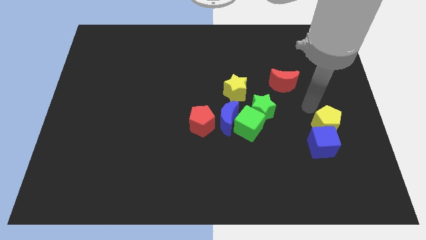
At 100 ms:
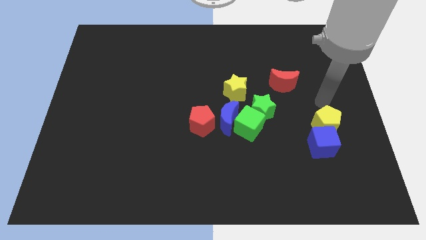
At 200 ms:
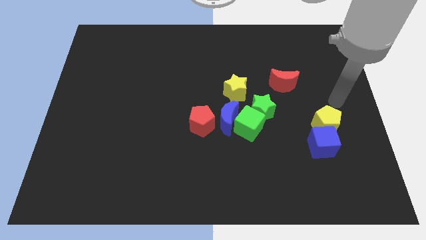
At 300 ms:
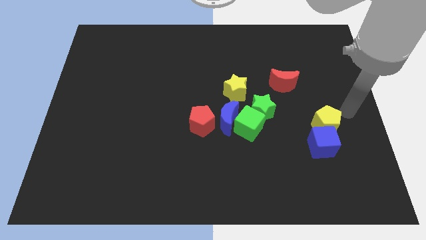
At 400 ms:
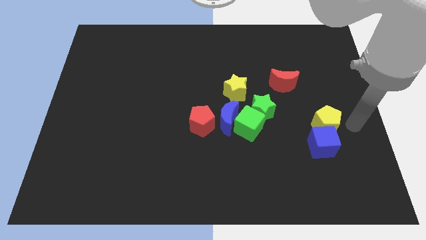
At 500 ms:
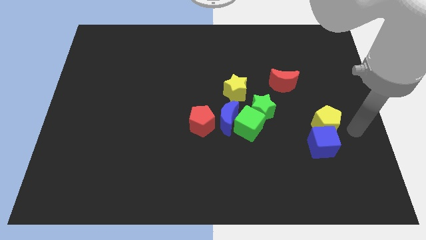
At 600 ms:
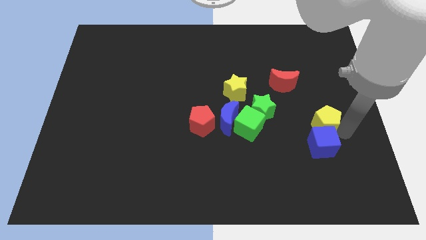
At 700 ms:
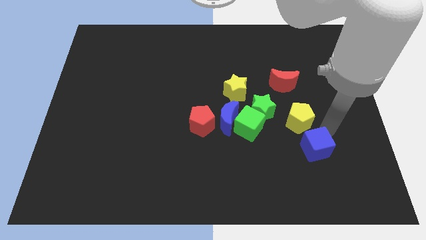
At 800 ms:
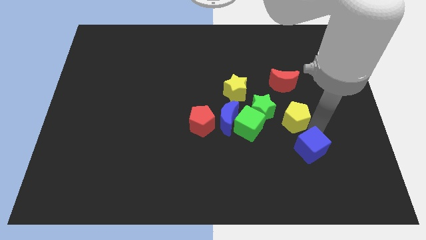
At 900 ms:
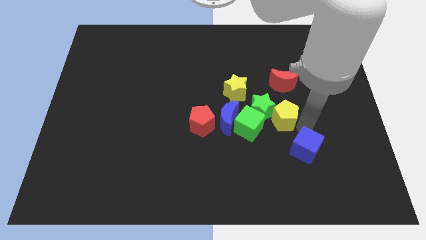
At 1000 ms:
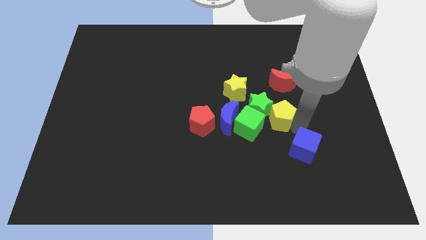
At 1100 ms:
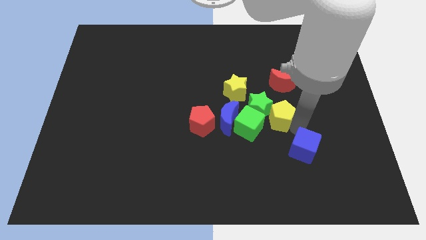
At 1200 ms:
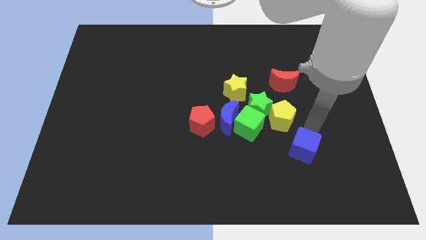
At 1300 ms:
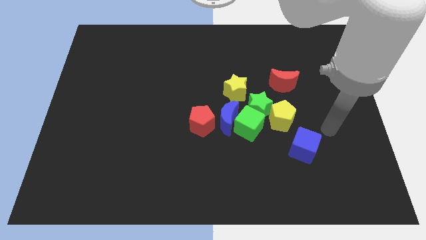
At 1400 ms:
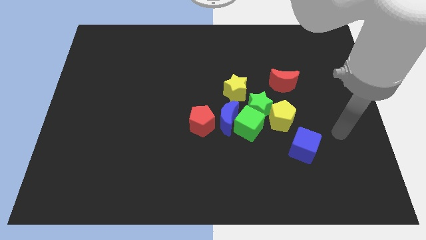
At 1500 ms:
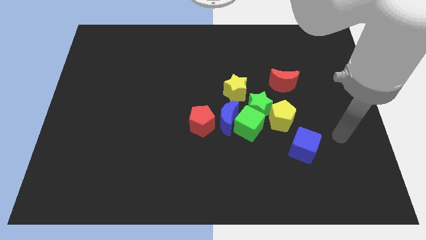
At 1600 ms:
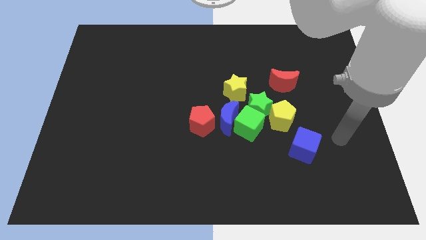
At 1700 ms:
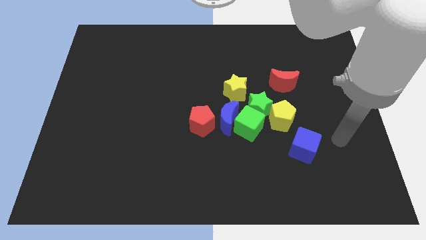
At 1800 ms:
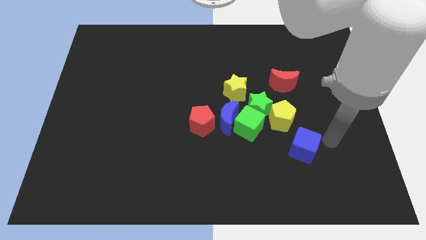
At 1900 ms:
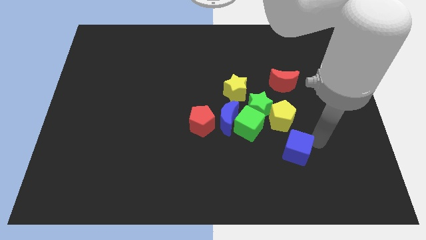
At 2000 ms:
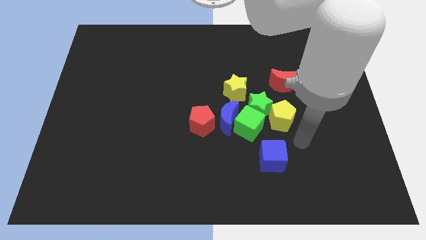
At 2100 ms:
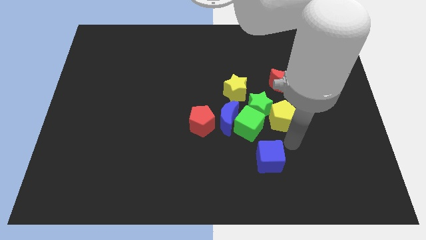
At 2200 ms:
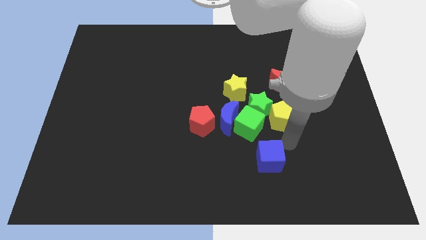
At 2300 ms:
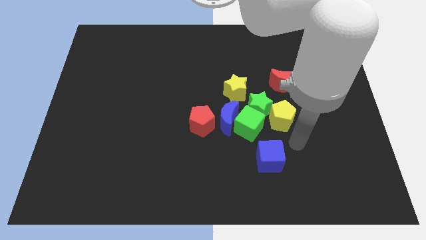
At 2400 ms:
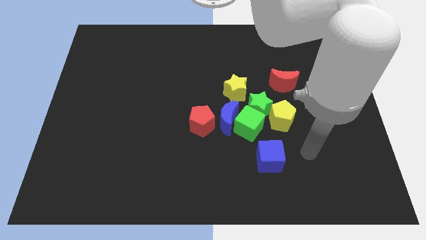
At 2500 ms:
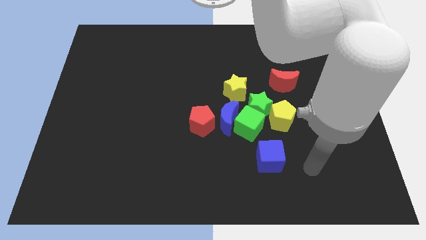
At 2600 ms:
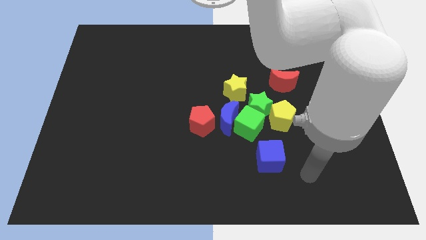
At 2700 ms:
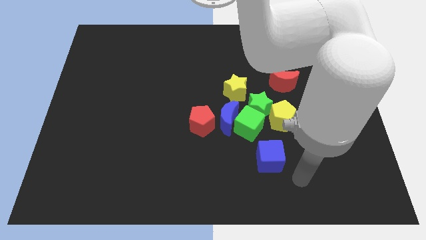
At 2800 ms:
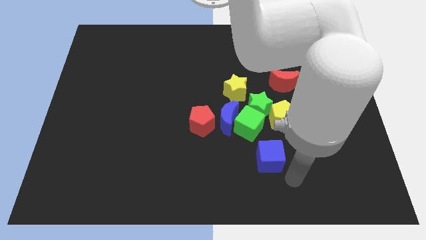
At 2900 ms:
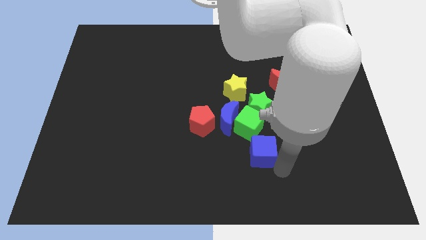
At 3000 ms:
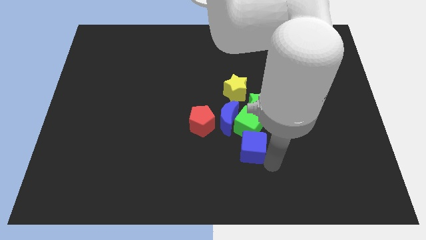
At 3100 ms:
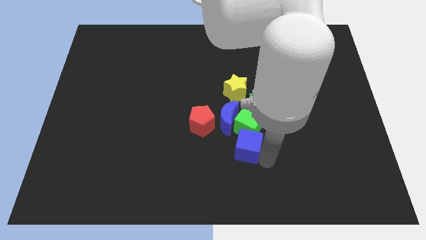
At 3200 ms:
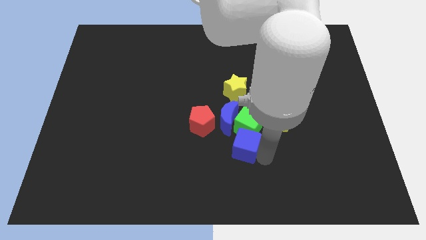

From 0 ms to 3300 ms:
separate the yellow pentagon from the blue cube

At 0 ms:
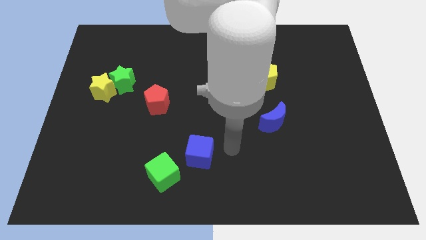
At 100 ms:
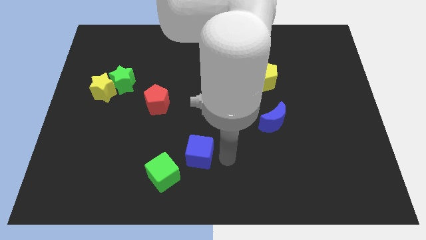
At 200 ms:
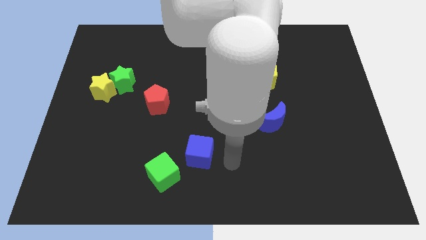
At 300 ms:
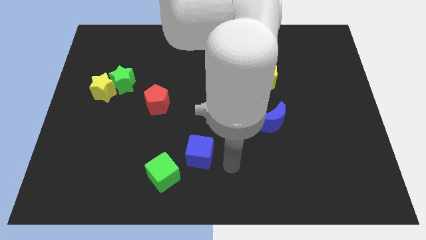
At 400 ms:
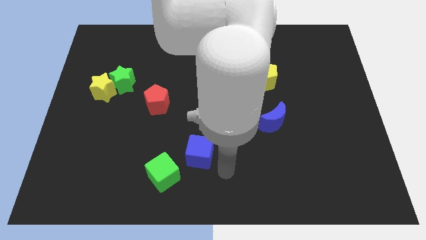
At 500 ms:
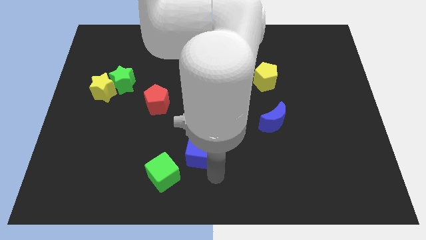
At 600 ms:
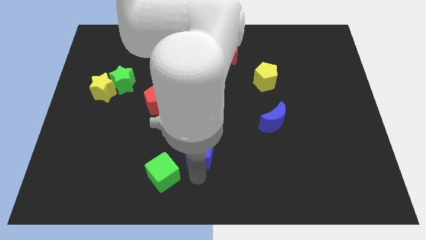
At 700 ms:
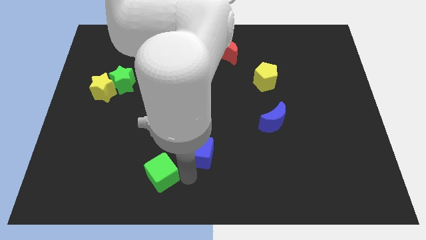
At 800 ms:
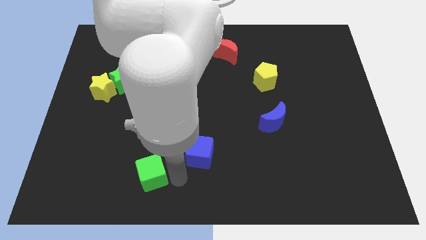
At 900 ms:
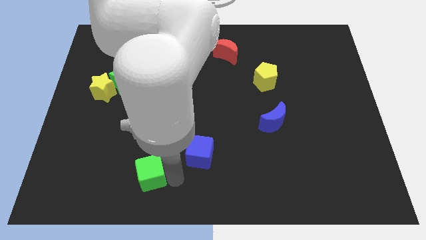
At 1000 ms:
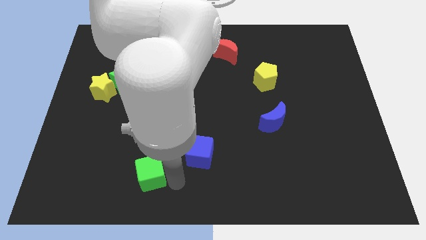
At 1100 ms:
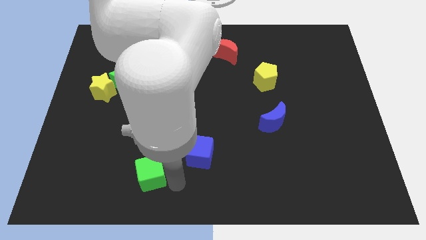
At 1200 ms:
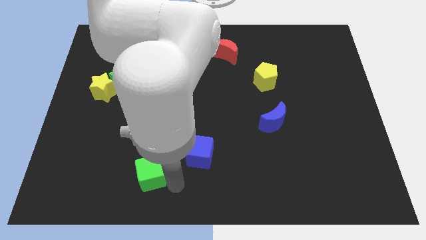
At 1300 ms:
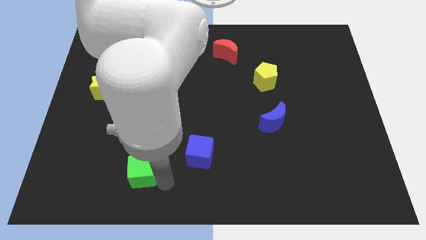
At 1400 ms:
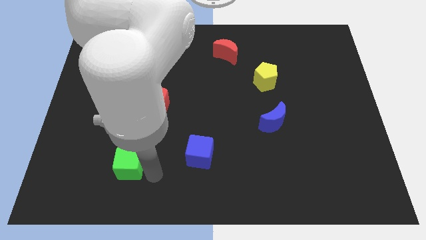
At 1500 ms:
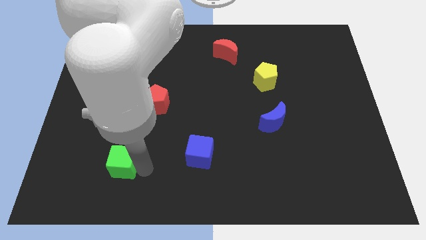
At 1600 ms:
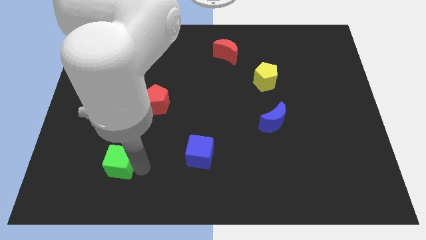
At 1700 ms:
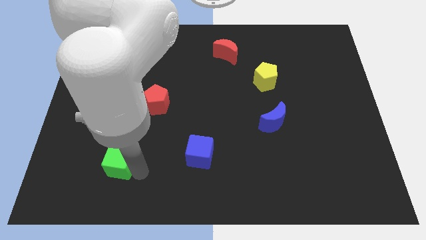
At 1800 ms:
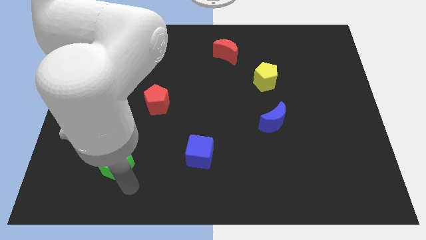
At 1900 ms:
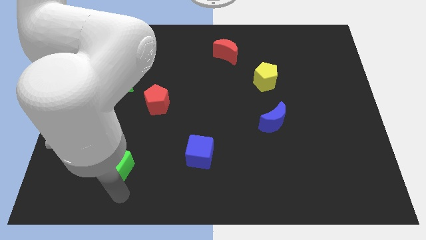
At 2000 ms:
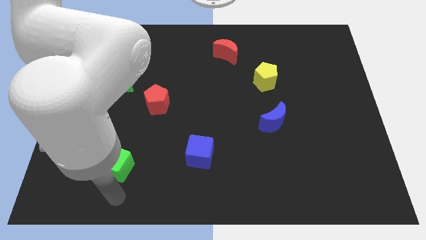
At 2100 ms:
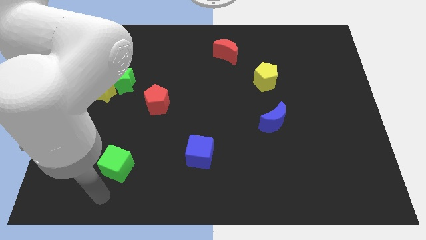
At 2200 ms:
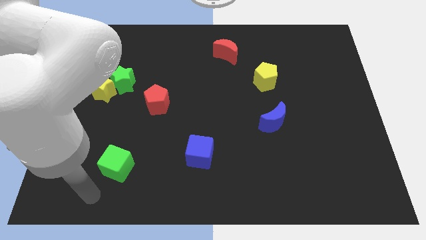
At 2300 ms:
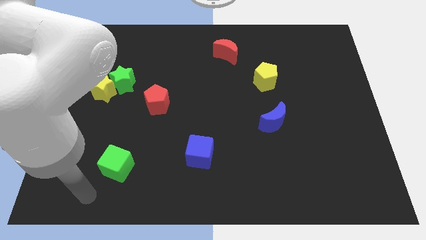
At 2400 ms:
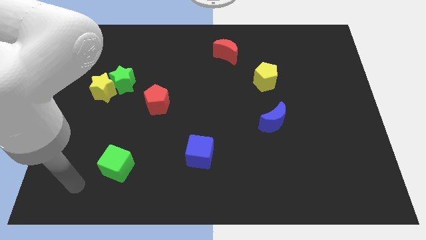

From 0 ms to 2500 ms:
place green cube to the left of blue cube

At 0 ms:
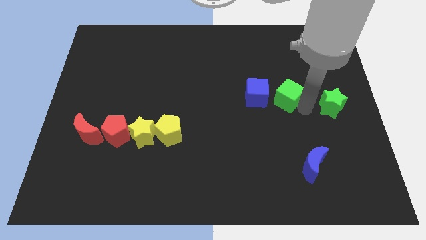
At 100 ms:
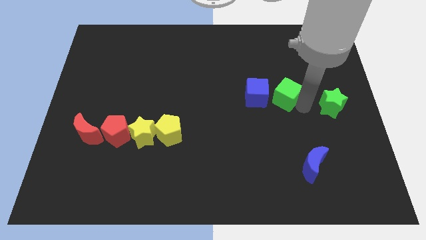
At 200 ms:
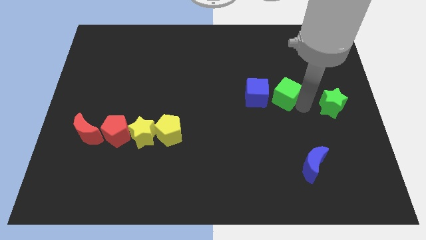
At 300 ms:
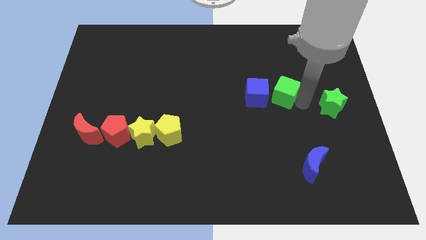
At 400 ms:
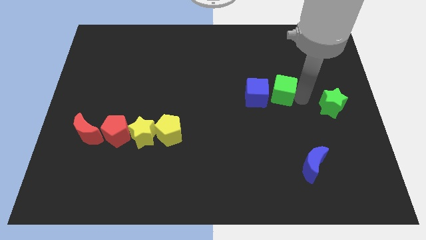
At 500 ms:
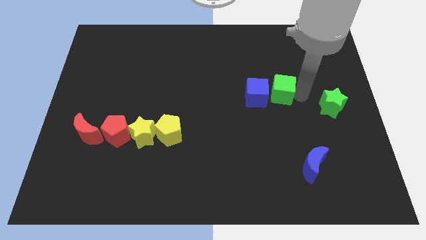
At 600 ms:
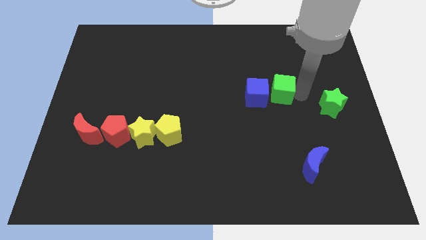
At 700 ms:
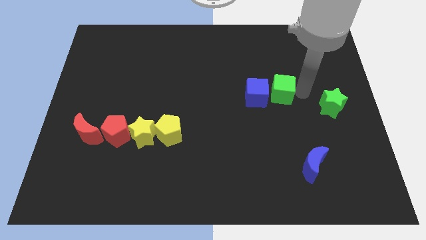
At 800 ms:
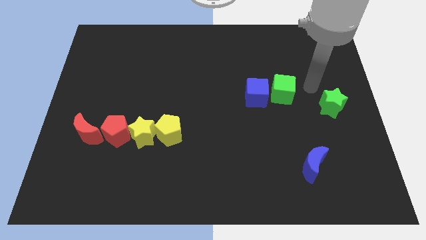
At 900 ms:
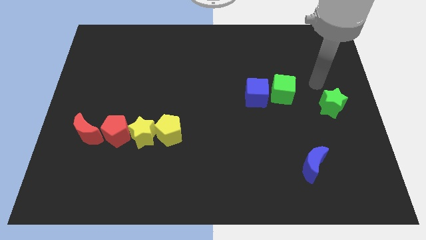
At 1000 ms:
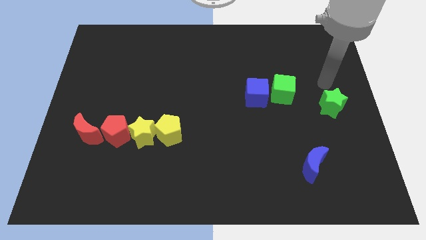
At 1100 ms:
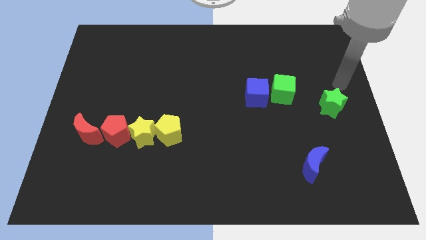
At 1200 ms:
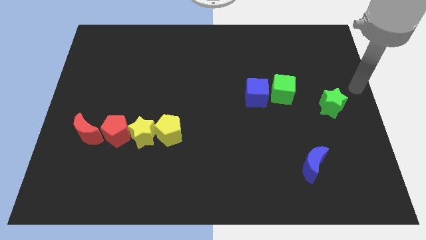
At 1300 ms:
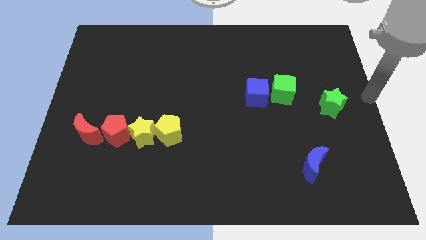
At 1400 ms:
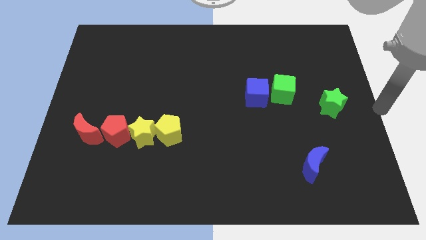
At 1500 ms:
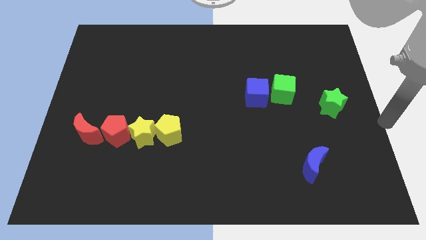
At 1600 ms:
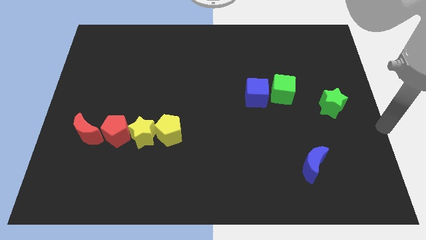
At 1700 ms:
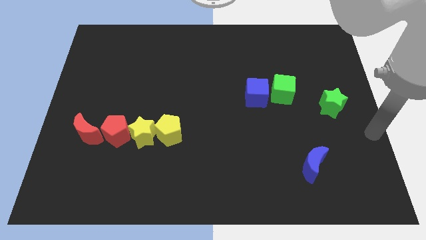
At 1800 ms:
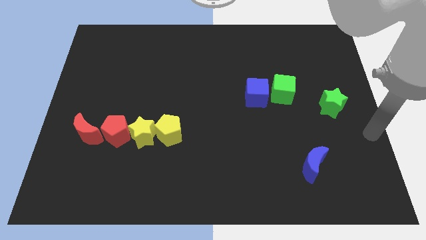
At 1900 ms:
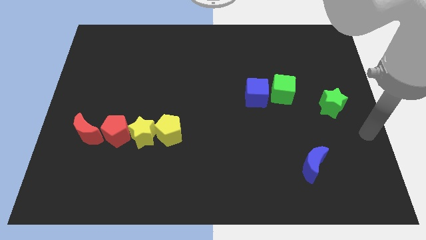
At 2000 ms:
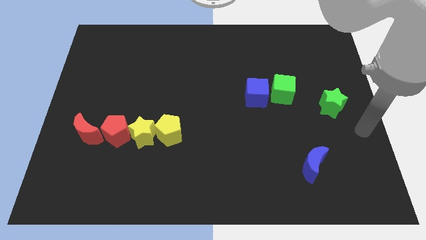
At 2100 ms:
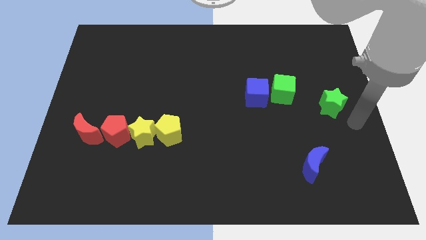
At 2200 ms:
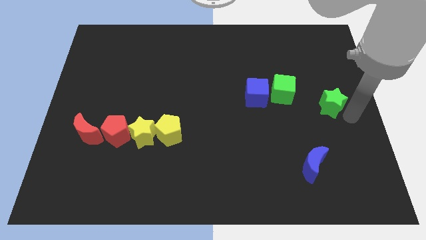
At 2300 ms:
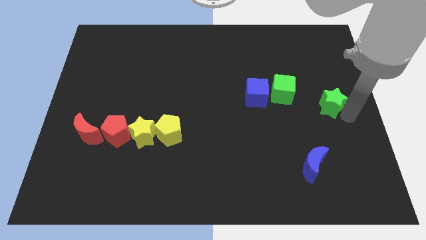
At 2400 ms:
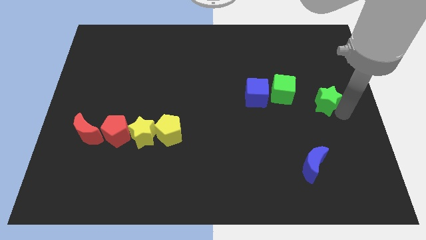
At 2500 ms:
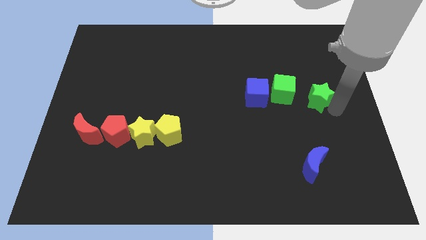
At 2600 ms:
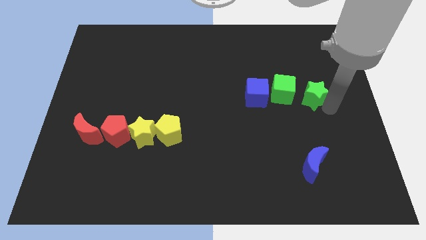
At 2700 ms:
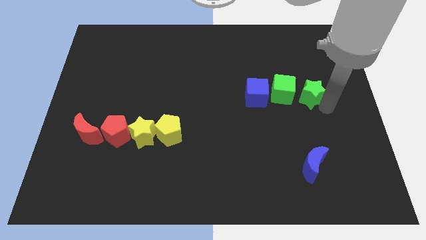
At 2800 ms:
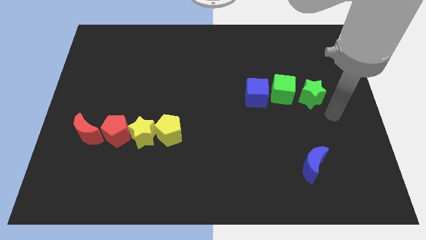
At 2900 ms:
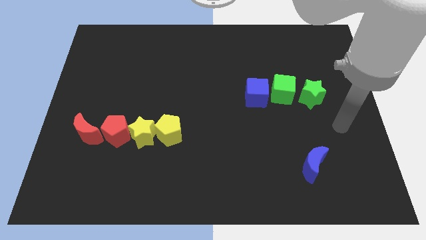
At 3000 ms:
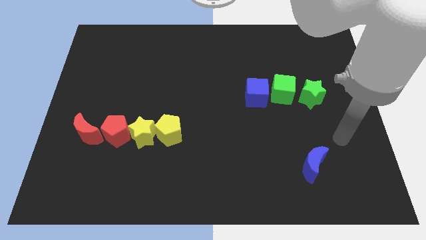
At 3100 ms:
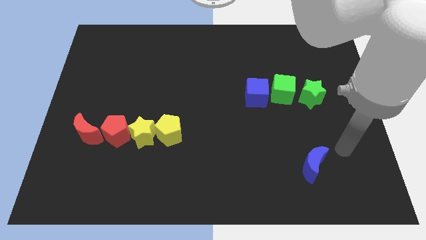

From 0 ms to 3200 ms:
push the green star to the right of the green cube
